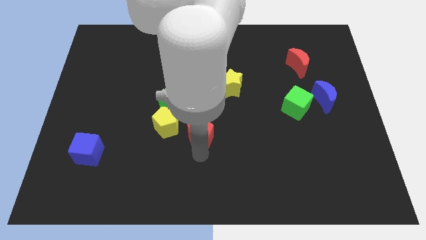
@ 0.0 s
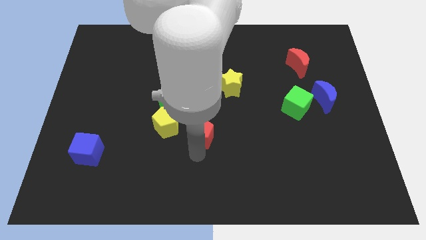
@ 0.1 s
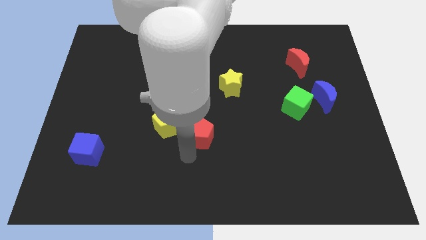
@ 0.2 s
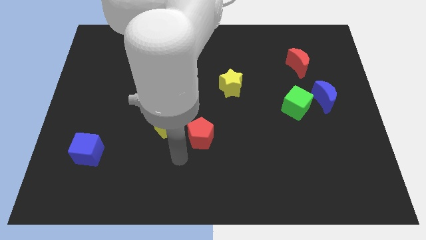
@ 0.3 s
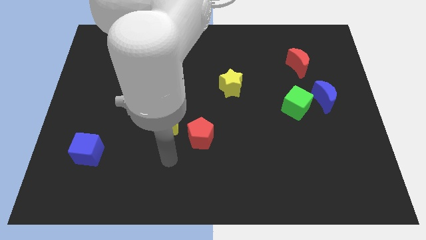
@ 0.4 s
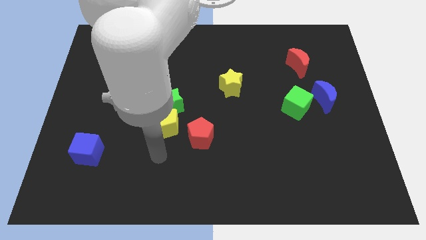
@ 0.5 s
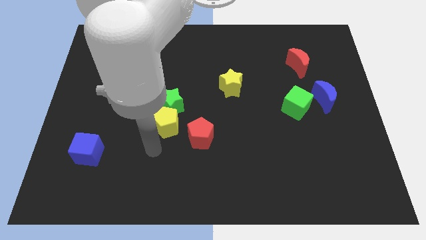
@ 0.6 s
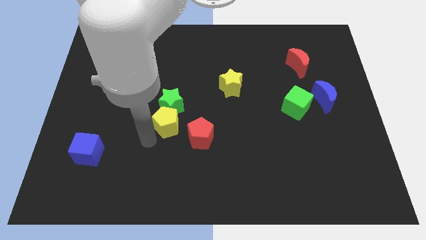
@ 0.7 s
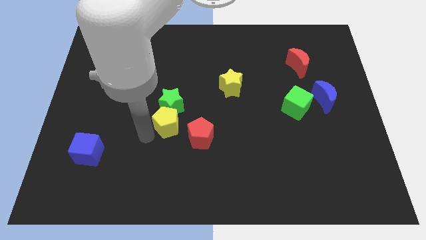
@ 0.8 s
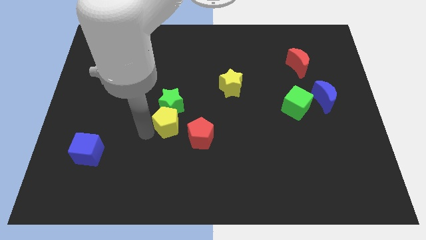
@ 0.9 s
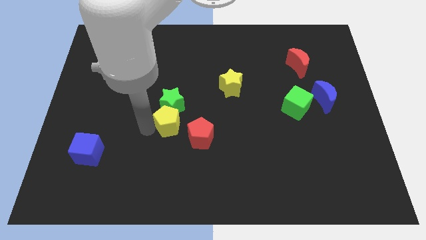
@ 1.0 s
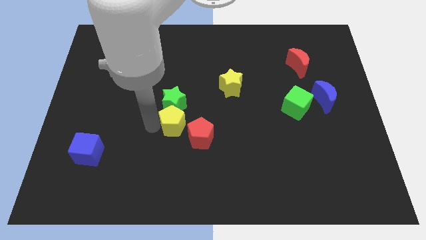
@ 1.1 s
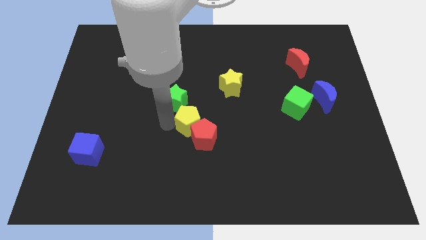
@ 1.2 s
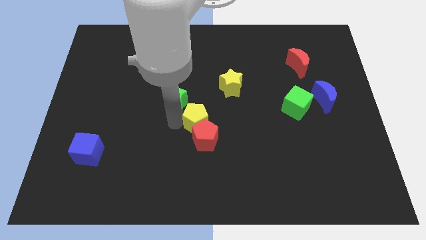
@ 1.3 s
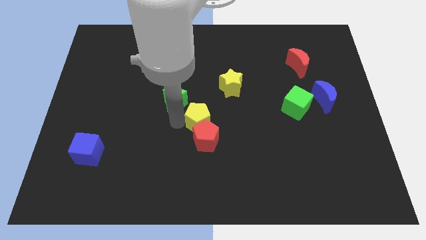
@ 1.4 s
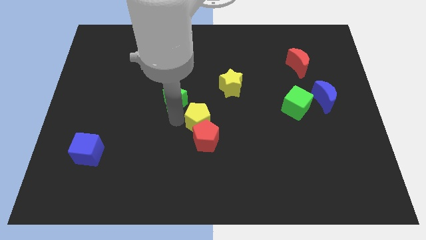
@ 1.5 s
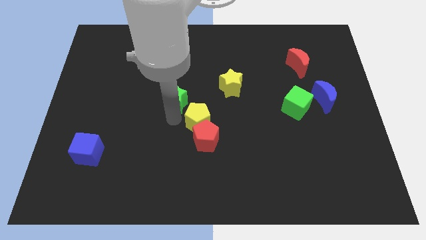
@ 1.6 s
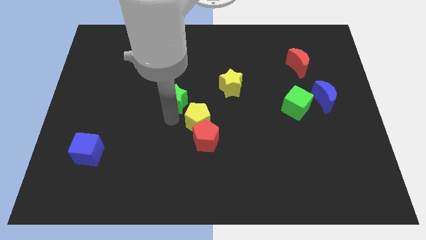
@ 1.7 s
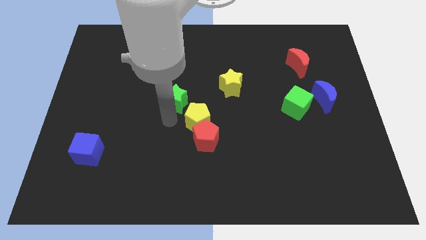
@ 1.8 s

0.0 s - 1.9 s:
move the yellow pentagon above the red pentagon

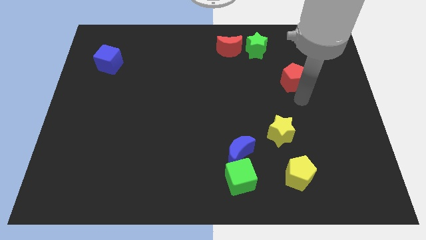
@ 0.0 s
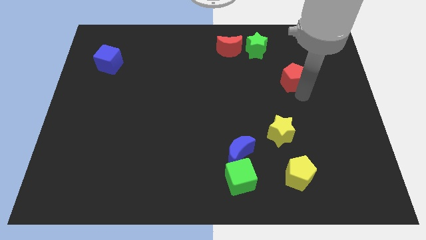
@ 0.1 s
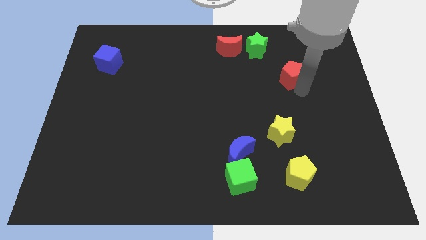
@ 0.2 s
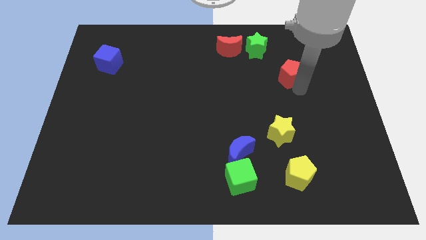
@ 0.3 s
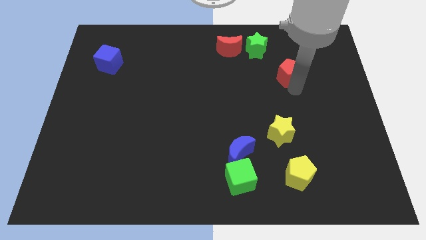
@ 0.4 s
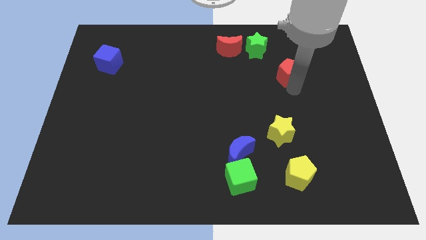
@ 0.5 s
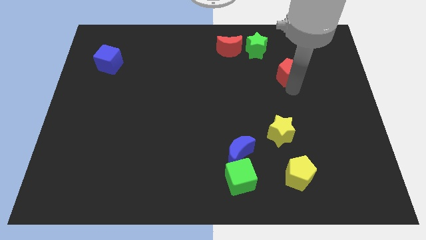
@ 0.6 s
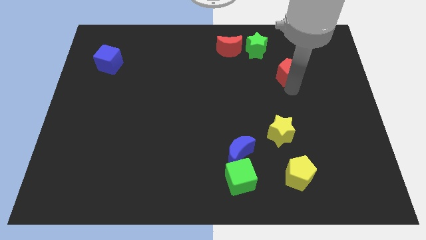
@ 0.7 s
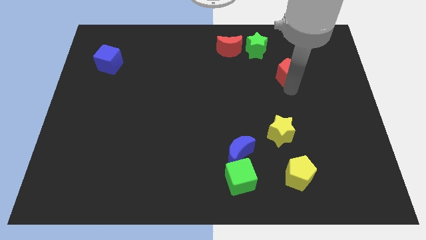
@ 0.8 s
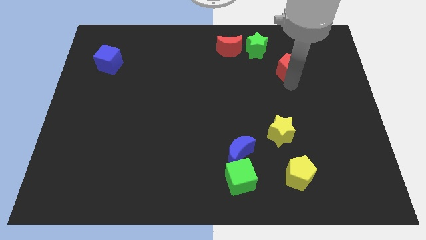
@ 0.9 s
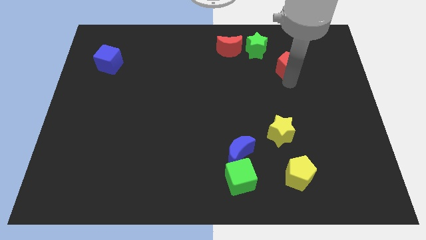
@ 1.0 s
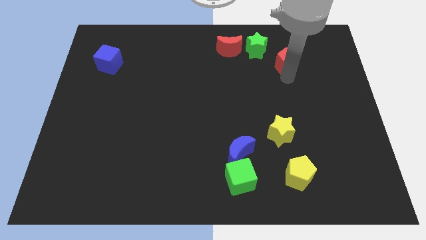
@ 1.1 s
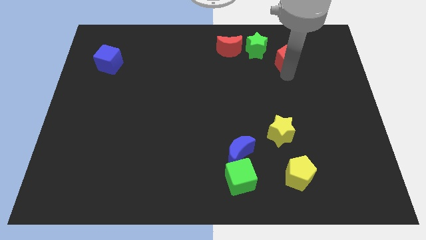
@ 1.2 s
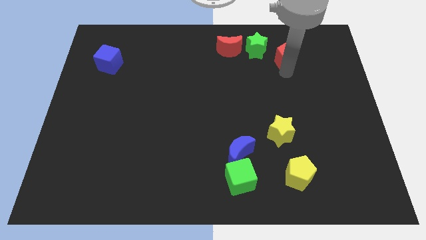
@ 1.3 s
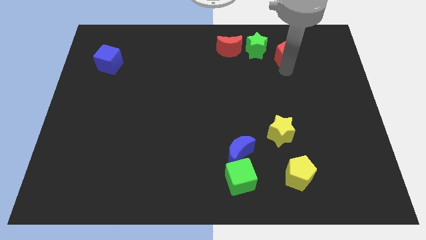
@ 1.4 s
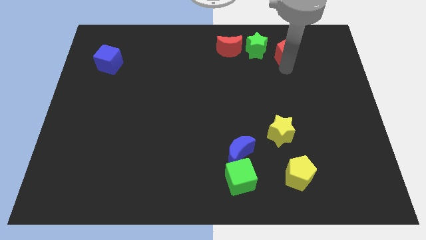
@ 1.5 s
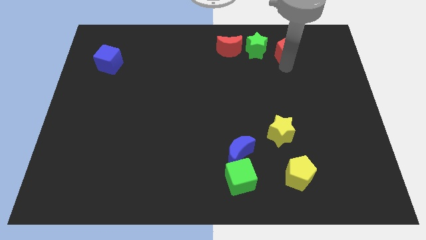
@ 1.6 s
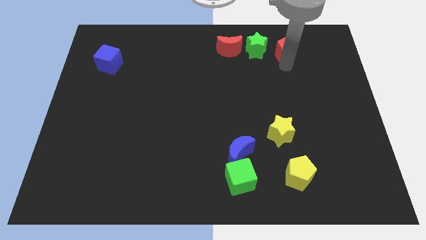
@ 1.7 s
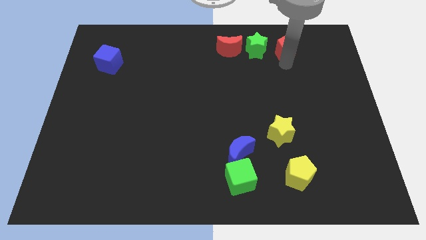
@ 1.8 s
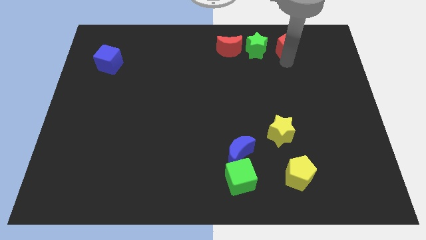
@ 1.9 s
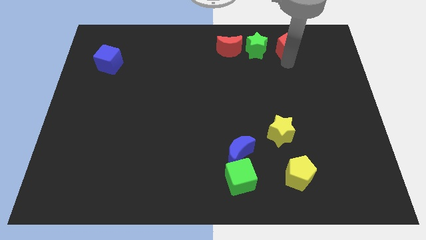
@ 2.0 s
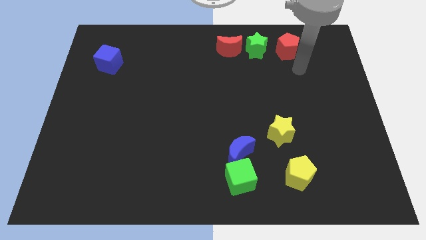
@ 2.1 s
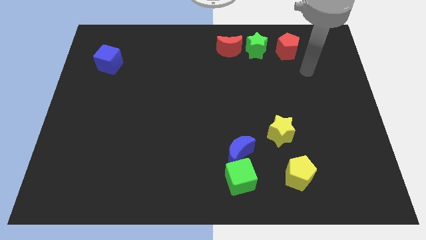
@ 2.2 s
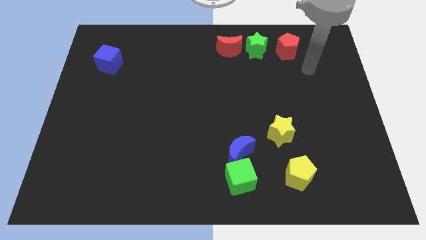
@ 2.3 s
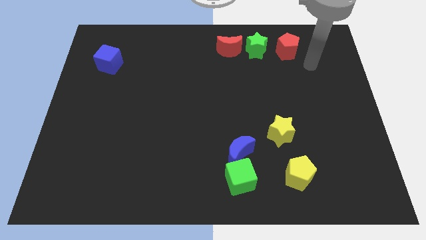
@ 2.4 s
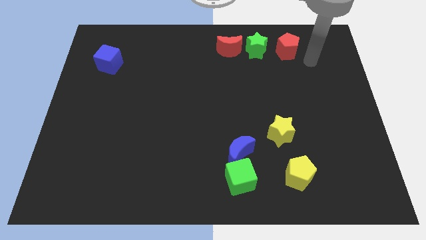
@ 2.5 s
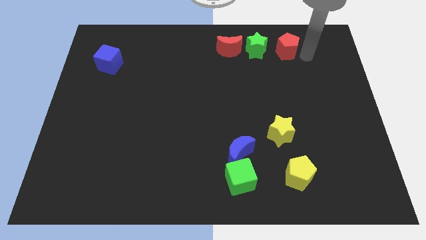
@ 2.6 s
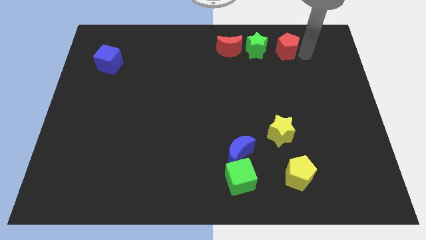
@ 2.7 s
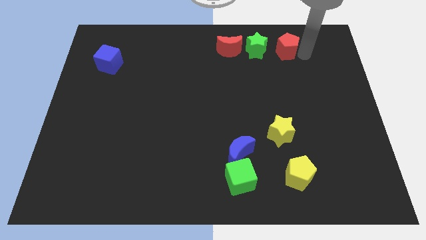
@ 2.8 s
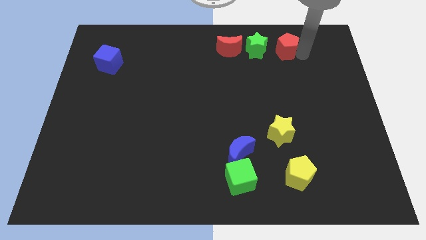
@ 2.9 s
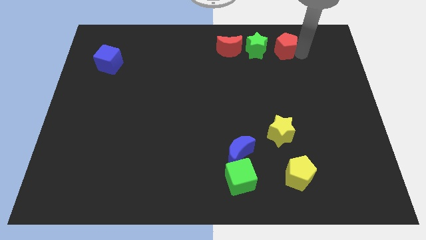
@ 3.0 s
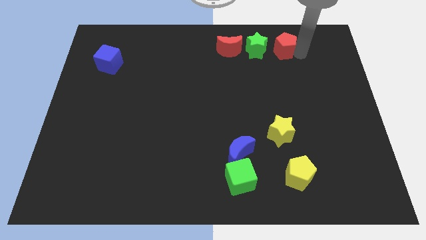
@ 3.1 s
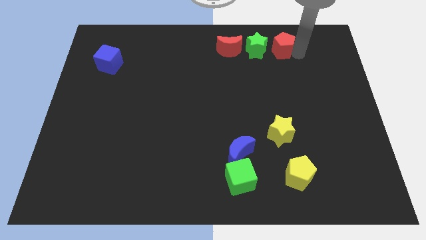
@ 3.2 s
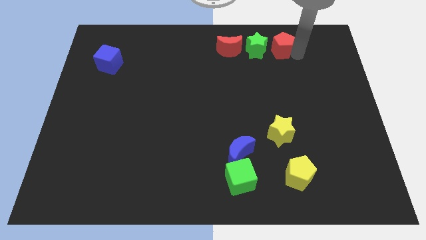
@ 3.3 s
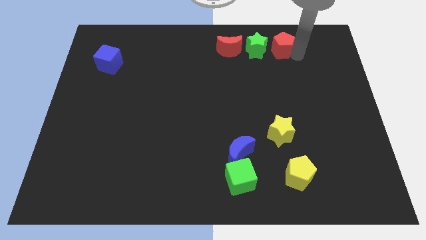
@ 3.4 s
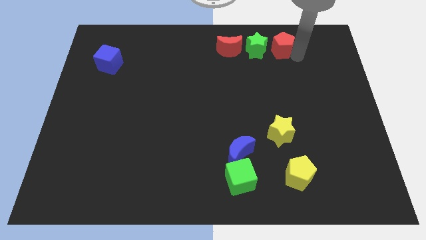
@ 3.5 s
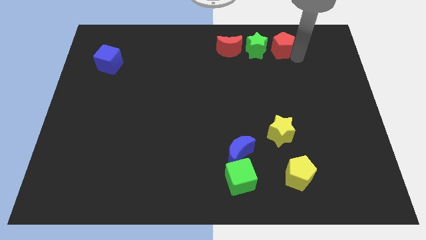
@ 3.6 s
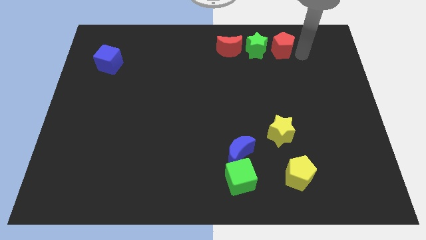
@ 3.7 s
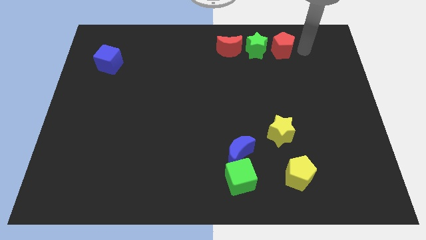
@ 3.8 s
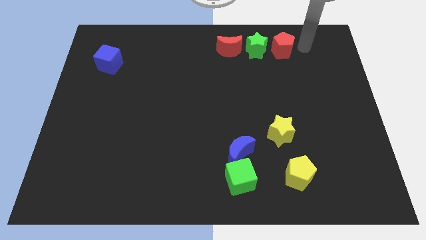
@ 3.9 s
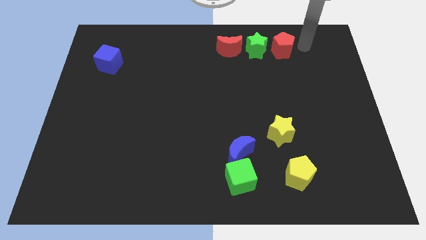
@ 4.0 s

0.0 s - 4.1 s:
slide red pentagon into green star

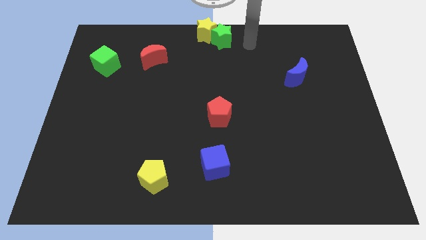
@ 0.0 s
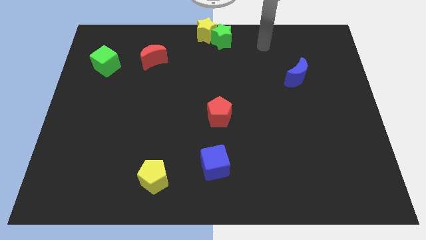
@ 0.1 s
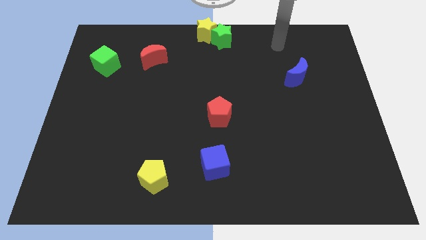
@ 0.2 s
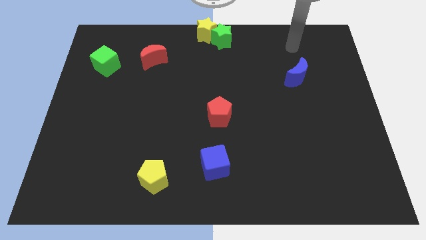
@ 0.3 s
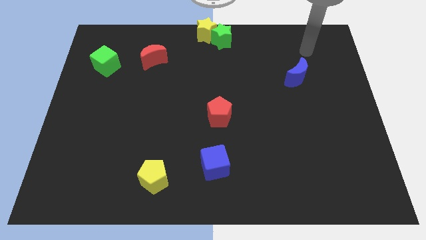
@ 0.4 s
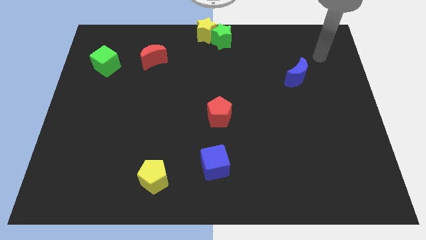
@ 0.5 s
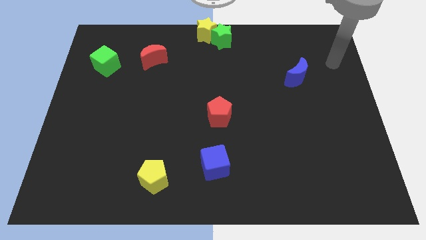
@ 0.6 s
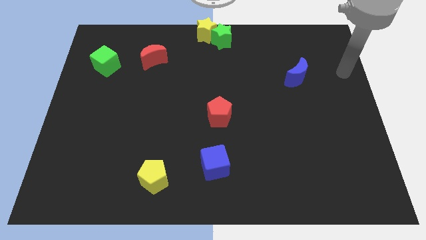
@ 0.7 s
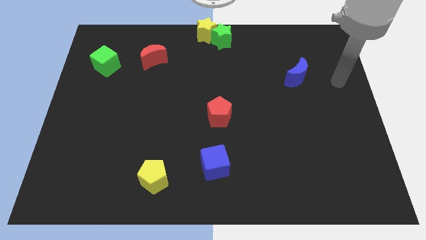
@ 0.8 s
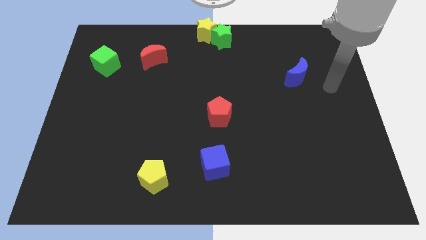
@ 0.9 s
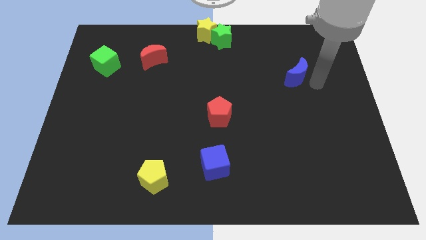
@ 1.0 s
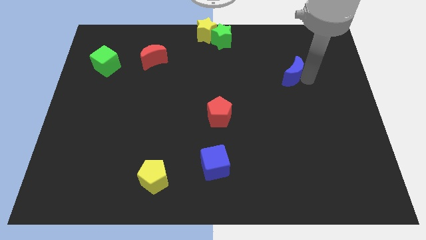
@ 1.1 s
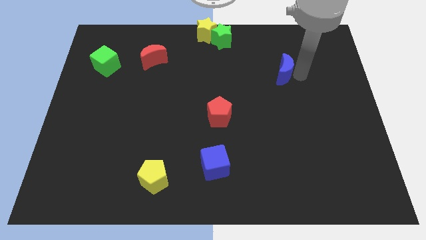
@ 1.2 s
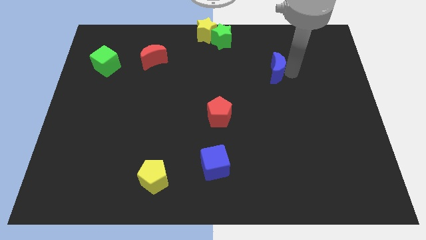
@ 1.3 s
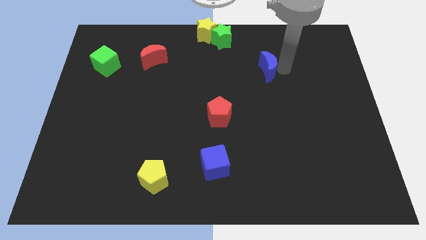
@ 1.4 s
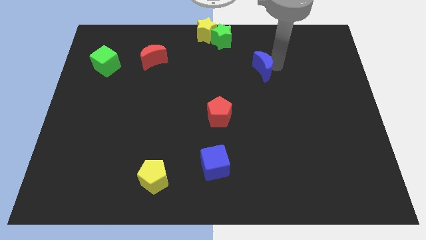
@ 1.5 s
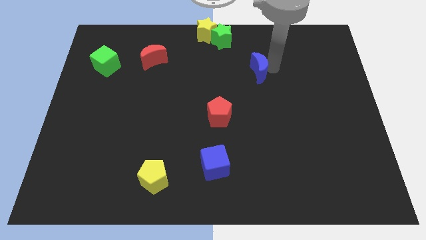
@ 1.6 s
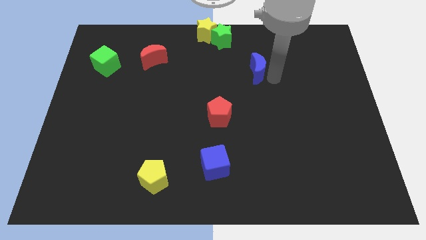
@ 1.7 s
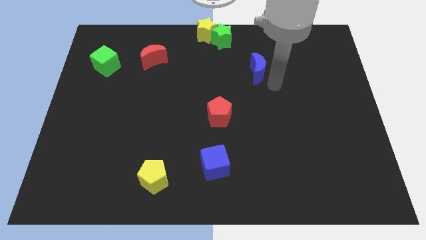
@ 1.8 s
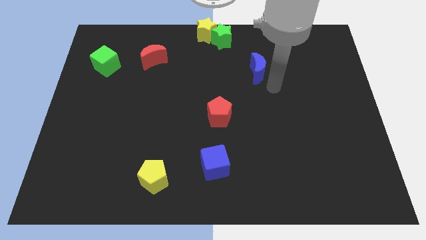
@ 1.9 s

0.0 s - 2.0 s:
move blue crescent to the bottom right side of the green star

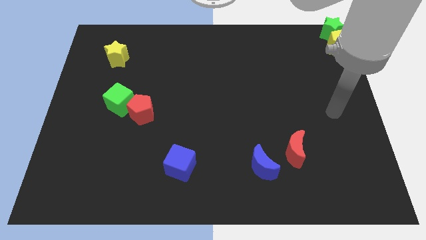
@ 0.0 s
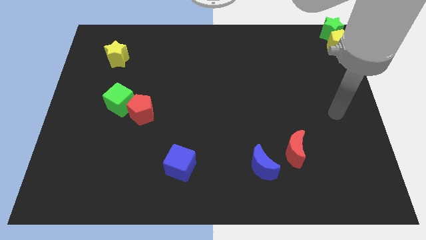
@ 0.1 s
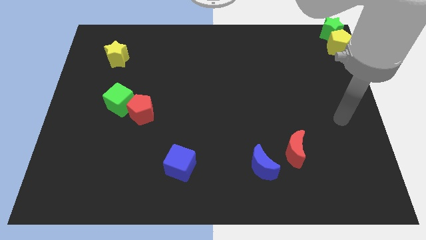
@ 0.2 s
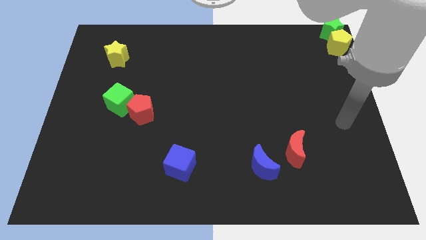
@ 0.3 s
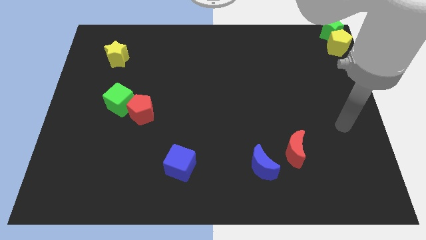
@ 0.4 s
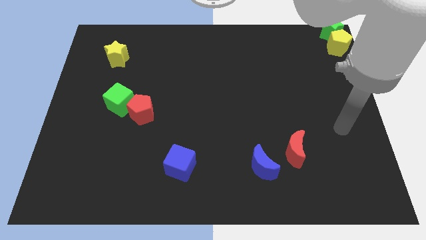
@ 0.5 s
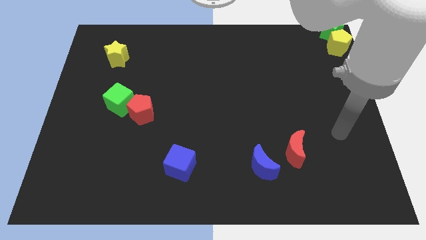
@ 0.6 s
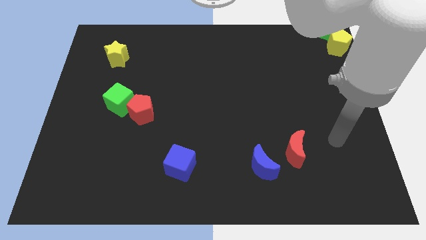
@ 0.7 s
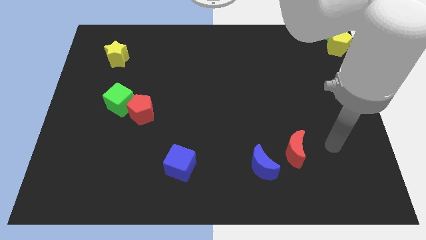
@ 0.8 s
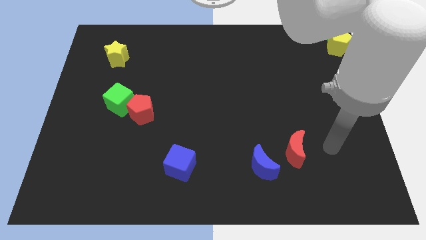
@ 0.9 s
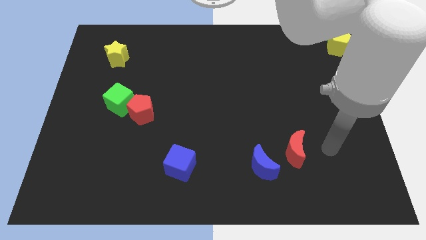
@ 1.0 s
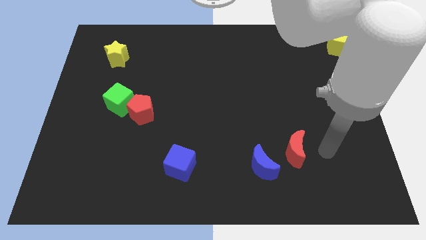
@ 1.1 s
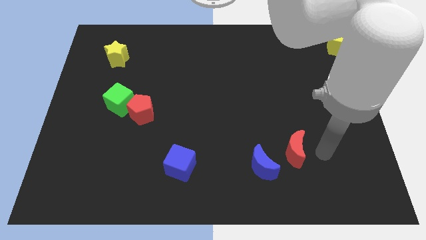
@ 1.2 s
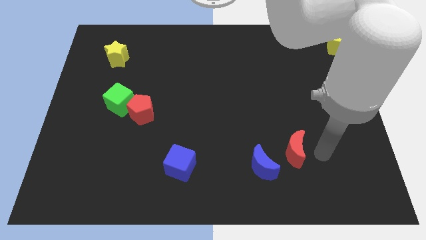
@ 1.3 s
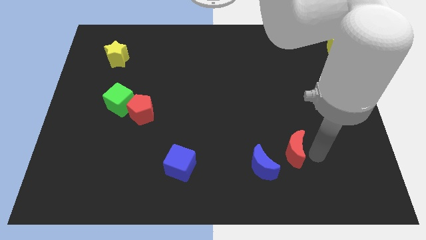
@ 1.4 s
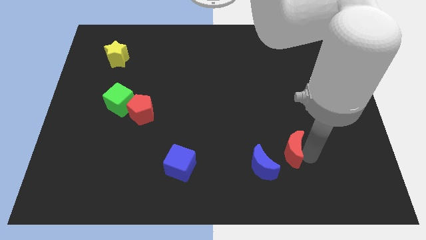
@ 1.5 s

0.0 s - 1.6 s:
point your arm to the right side of the red moon
